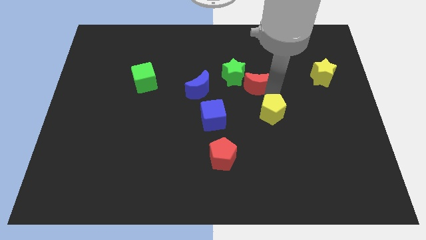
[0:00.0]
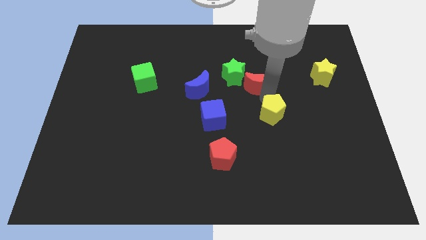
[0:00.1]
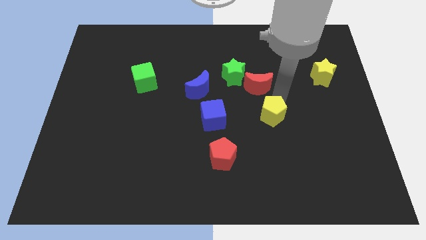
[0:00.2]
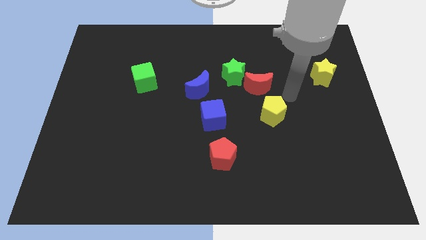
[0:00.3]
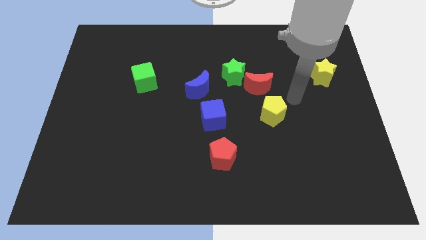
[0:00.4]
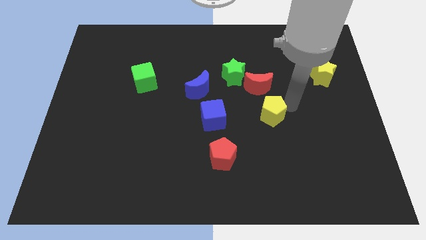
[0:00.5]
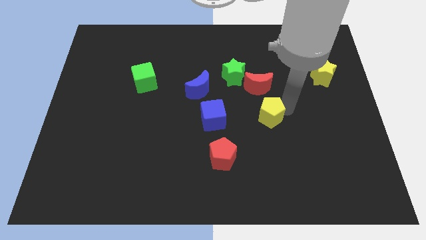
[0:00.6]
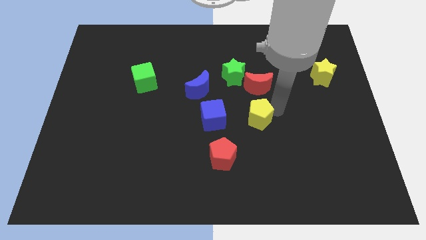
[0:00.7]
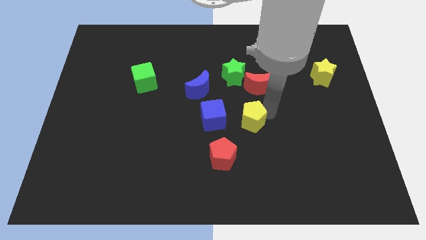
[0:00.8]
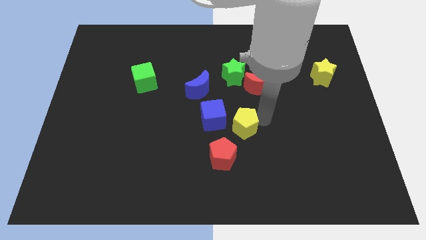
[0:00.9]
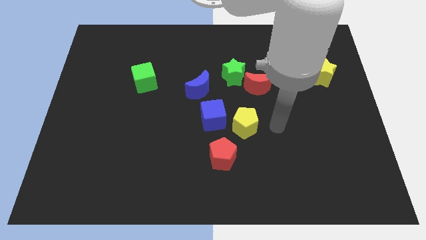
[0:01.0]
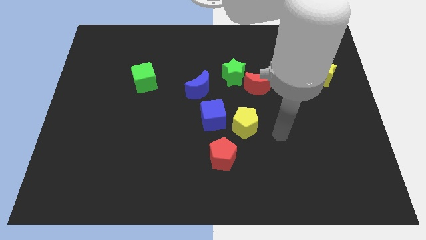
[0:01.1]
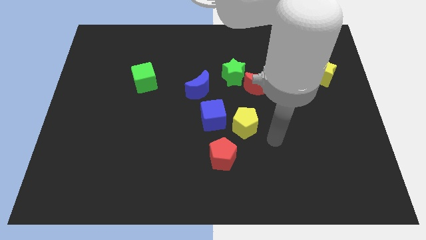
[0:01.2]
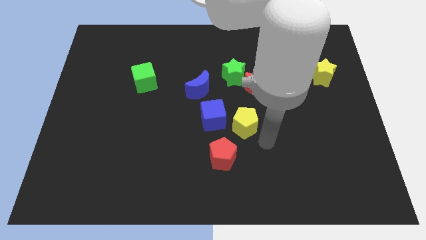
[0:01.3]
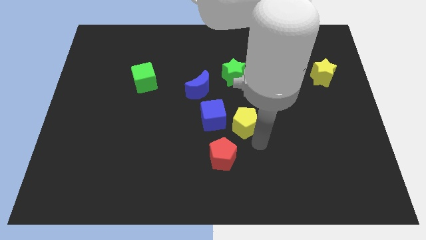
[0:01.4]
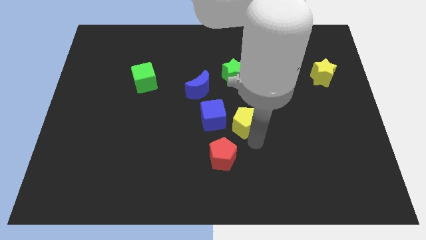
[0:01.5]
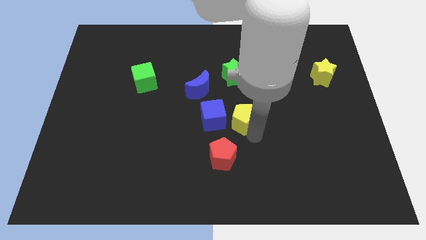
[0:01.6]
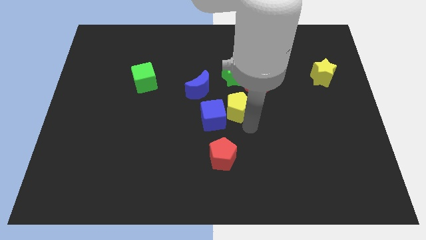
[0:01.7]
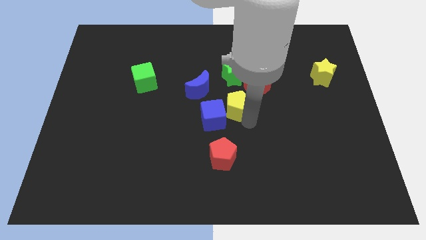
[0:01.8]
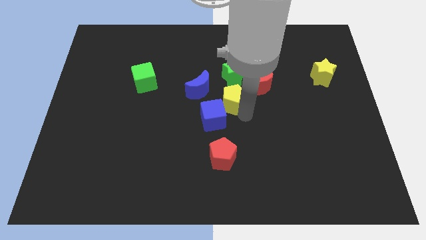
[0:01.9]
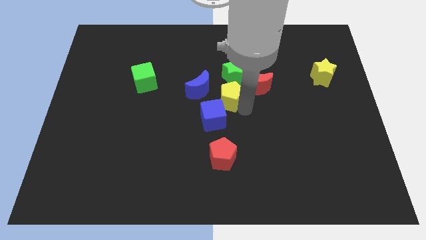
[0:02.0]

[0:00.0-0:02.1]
place the yellow pentagon to the center of the board

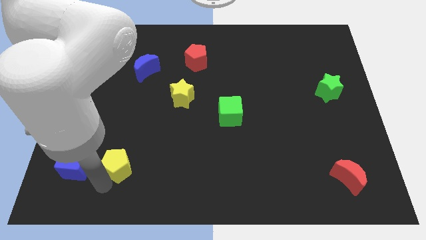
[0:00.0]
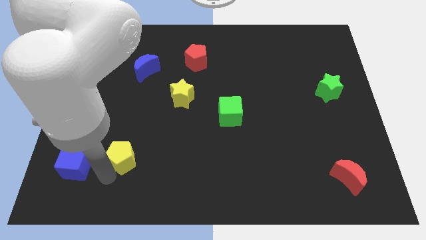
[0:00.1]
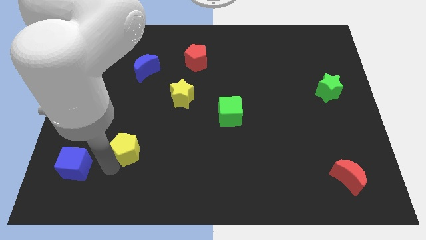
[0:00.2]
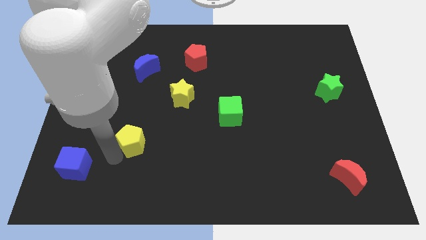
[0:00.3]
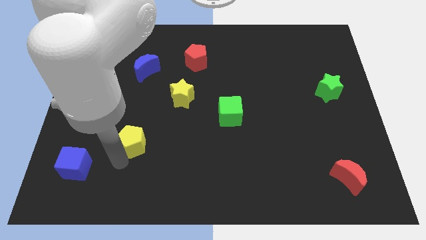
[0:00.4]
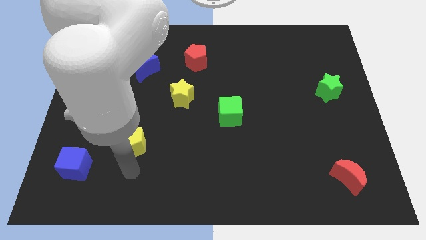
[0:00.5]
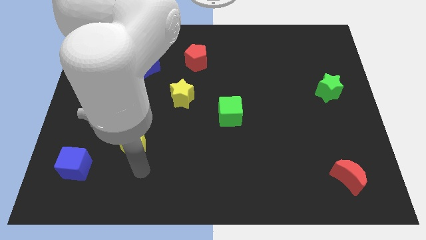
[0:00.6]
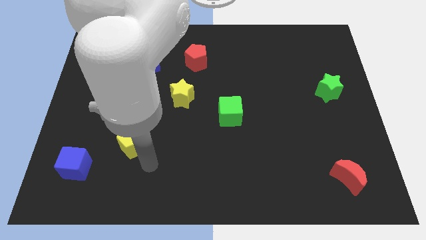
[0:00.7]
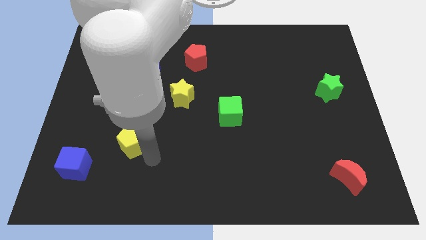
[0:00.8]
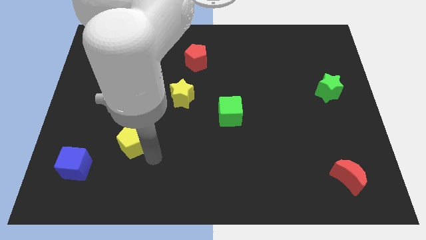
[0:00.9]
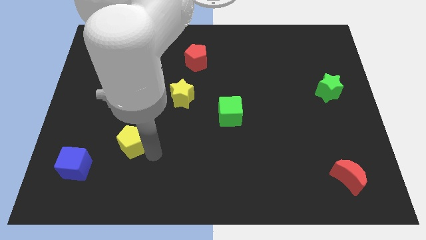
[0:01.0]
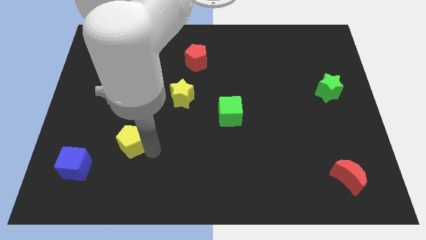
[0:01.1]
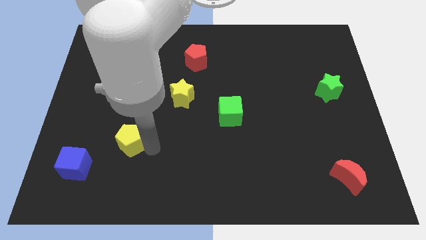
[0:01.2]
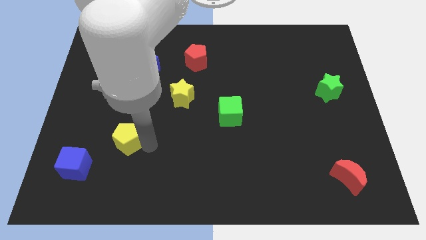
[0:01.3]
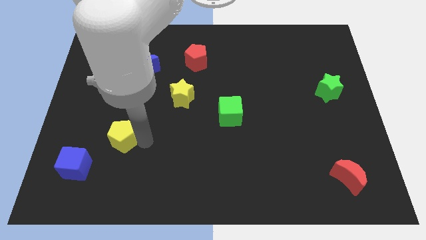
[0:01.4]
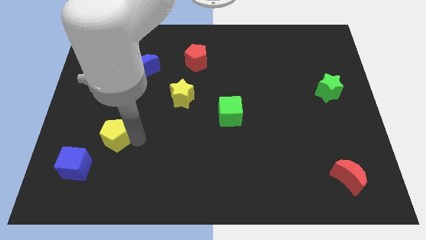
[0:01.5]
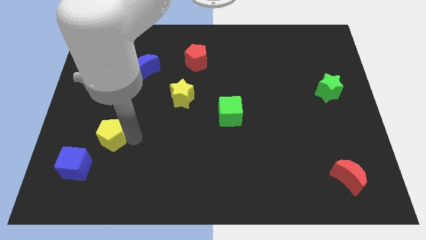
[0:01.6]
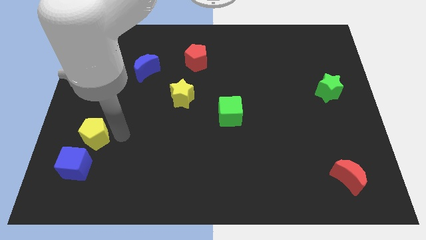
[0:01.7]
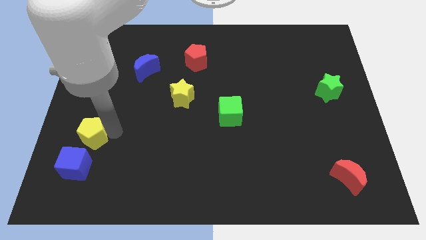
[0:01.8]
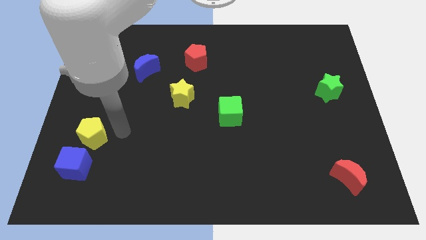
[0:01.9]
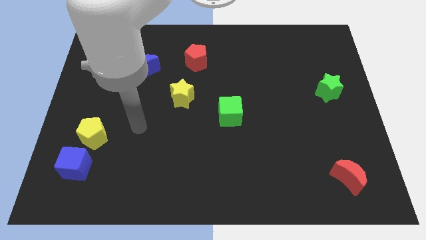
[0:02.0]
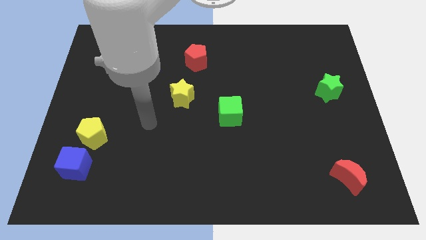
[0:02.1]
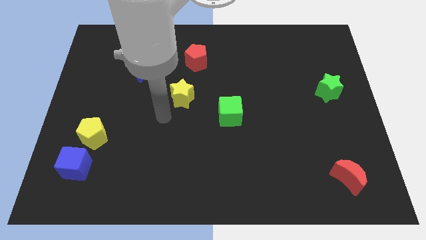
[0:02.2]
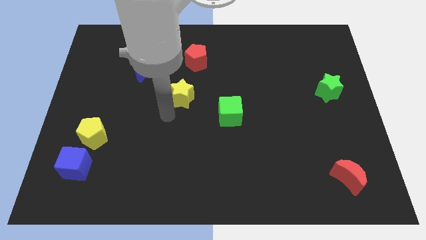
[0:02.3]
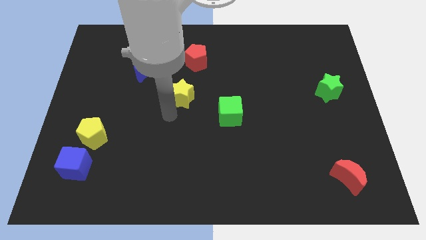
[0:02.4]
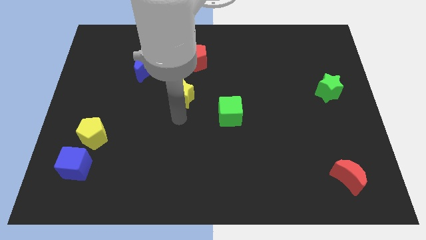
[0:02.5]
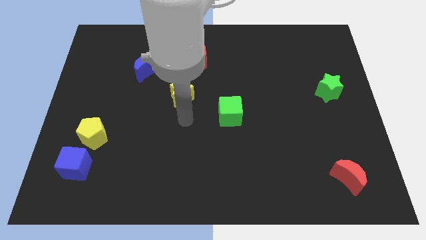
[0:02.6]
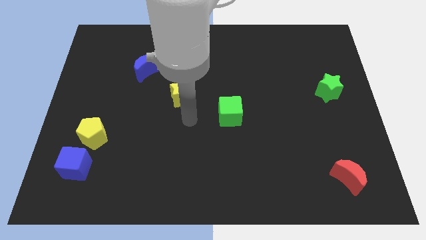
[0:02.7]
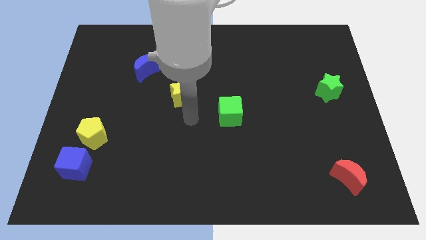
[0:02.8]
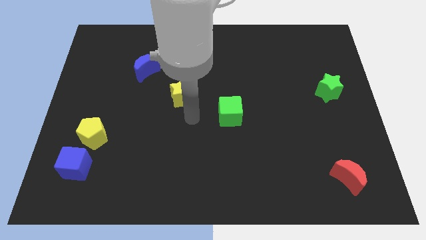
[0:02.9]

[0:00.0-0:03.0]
place the yellow pentagon to the top of the blue cube

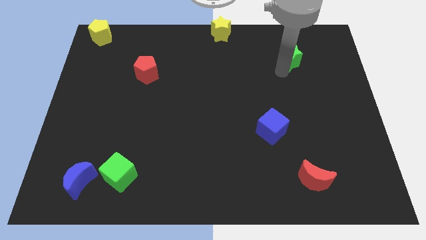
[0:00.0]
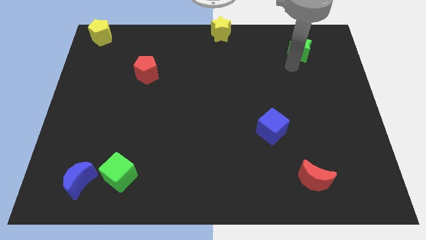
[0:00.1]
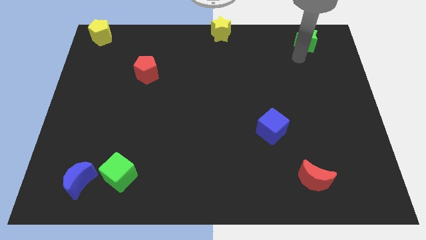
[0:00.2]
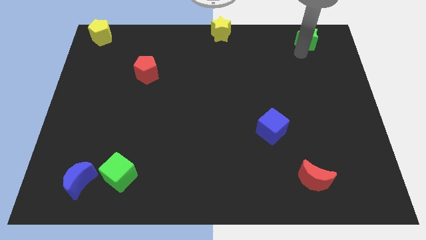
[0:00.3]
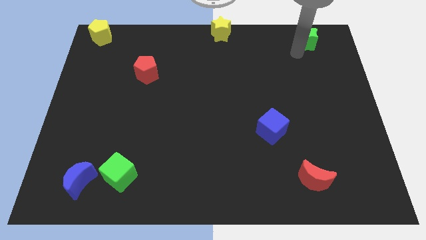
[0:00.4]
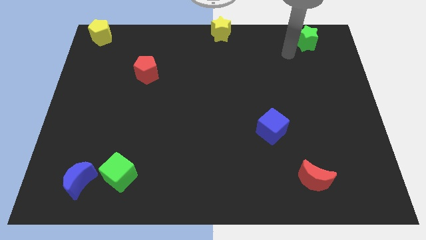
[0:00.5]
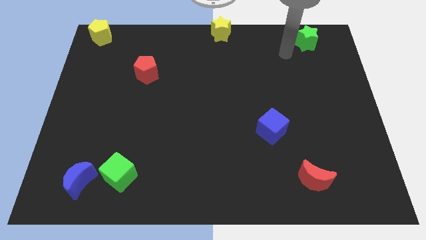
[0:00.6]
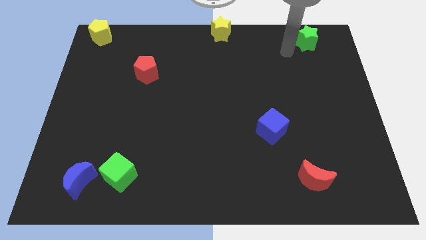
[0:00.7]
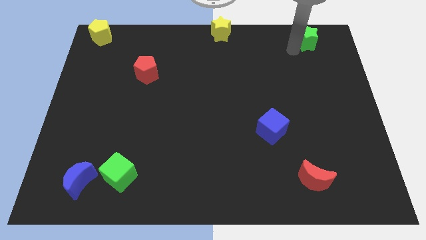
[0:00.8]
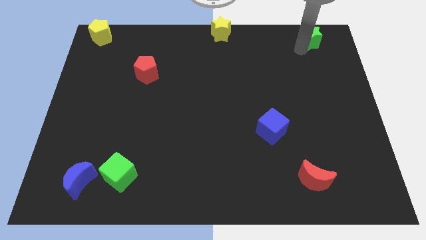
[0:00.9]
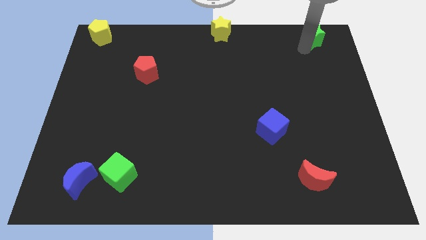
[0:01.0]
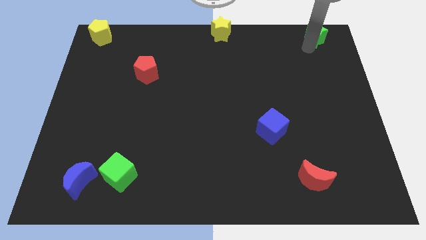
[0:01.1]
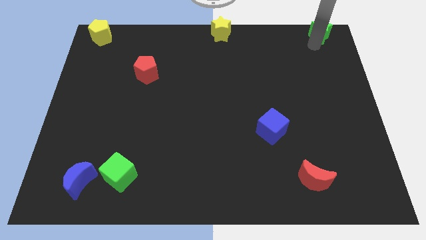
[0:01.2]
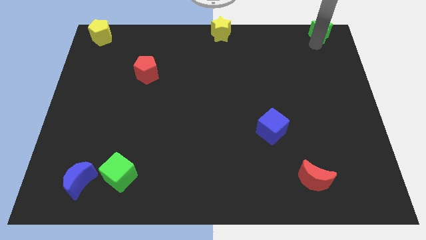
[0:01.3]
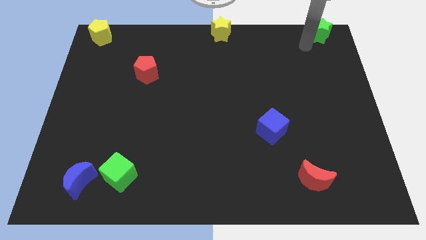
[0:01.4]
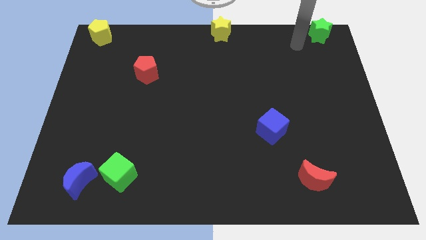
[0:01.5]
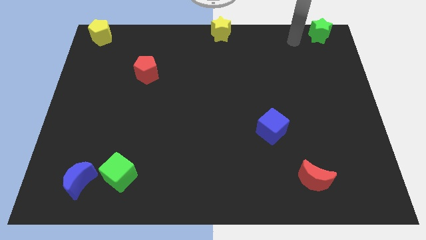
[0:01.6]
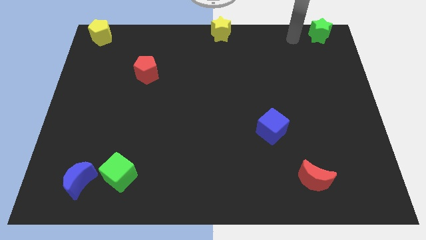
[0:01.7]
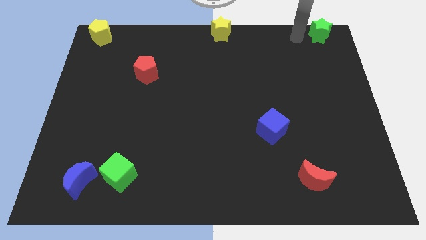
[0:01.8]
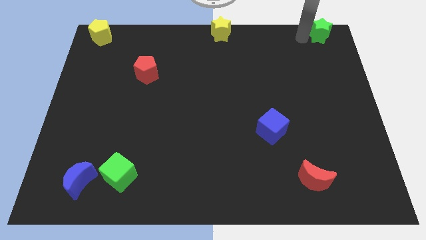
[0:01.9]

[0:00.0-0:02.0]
place the green star at the top right corner

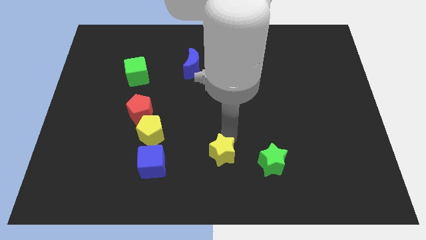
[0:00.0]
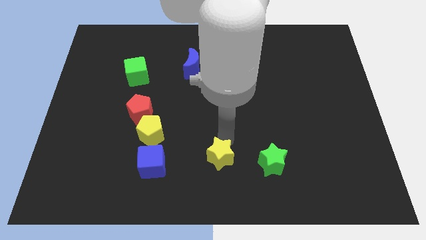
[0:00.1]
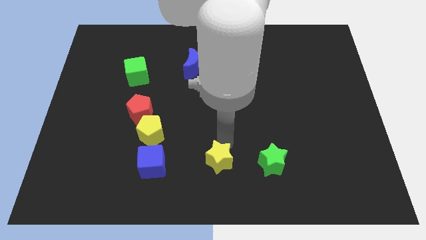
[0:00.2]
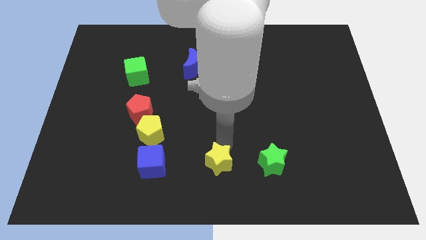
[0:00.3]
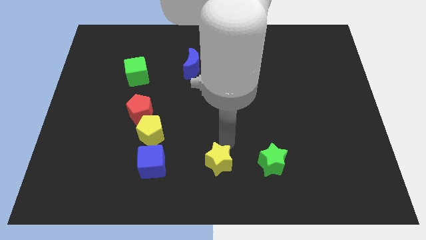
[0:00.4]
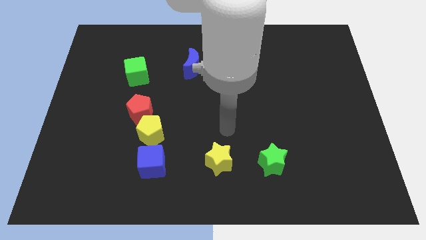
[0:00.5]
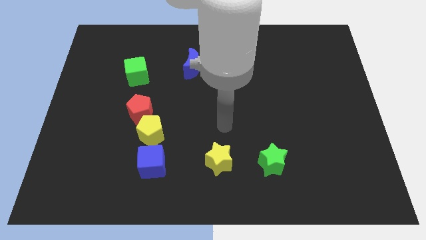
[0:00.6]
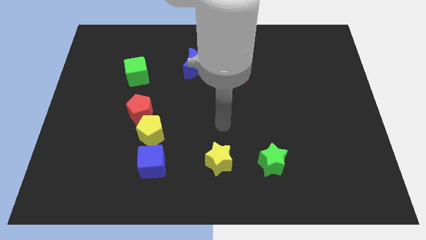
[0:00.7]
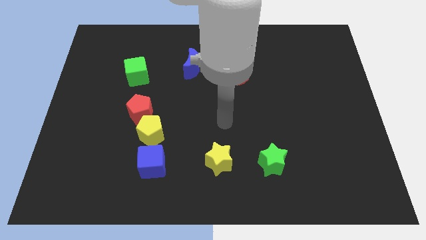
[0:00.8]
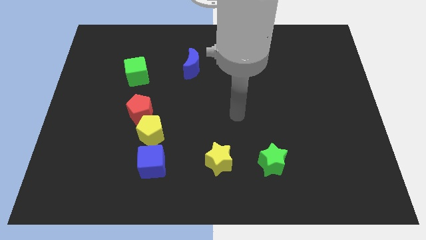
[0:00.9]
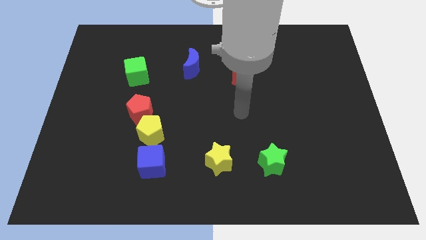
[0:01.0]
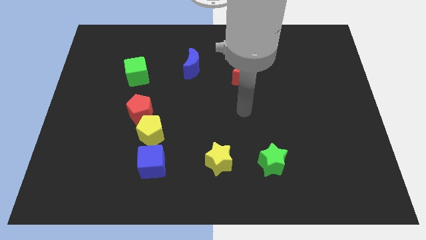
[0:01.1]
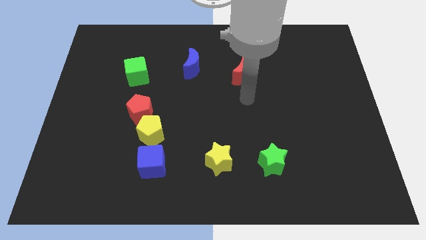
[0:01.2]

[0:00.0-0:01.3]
place the yellow star right to the blue cube

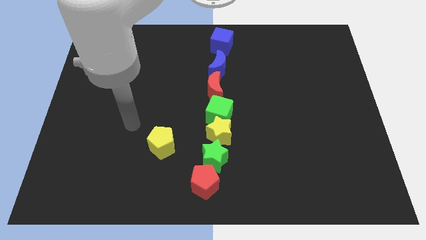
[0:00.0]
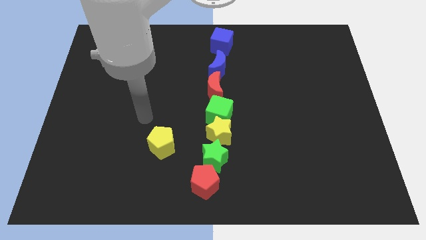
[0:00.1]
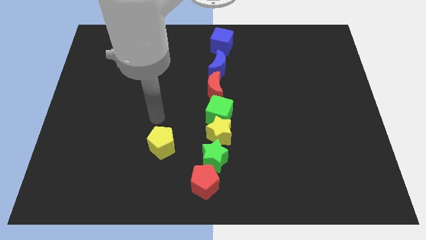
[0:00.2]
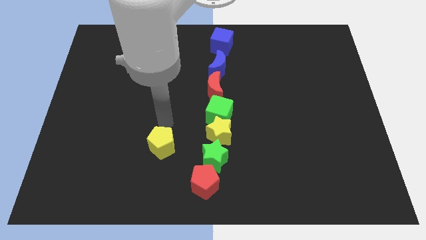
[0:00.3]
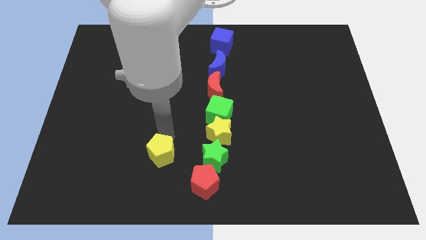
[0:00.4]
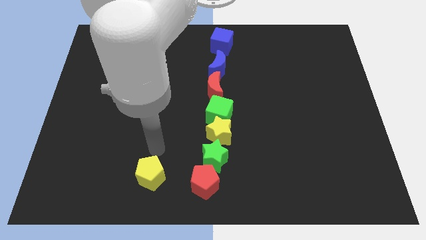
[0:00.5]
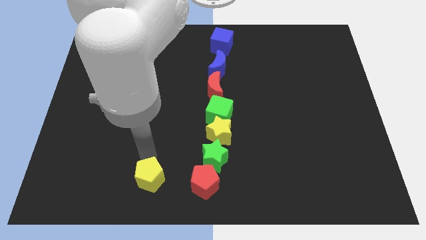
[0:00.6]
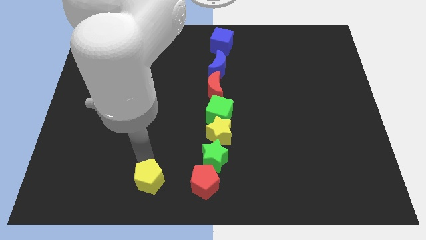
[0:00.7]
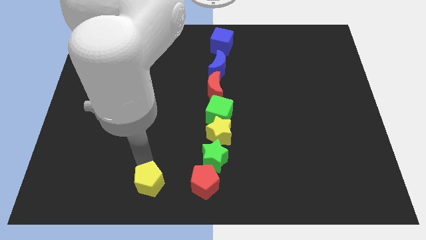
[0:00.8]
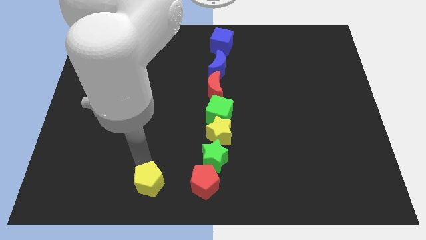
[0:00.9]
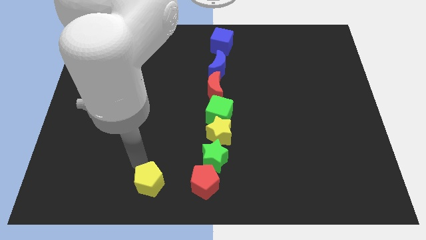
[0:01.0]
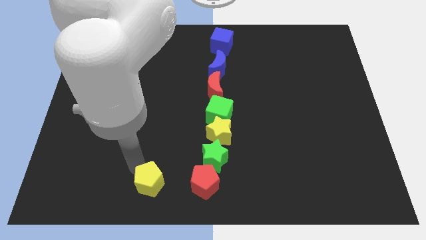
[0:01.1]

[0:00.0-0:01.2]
push yellow pentagon beside yellow pentagon
